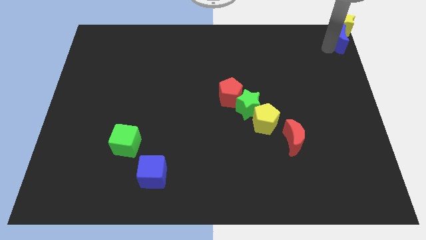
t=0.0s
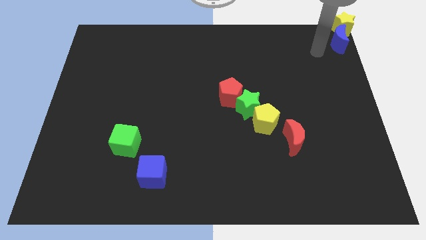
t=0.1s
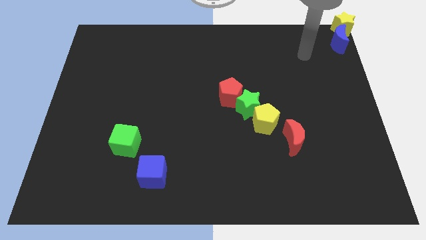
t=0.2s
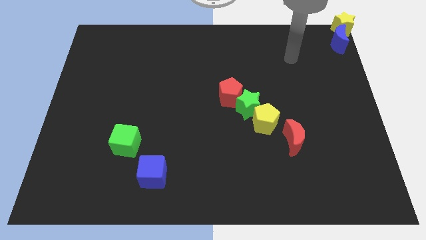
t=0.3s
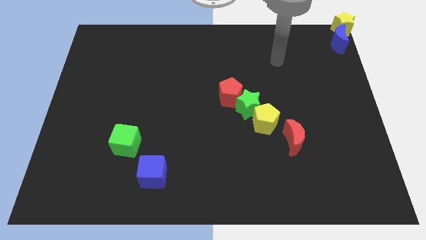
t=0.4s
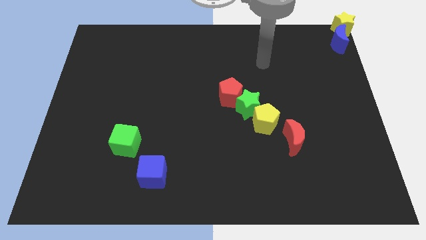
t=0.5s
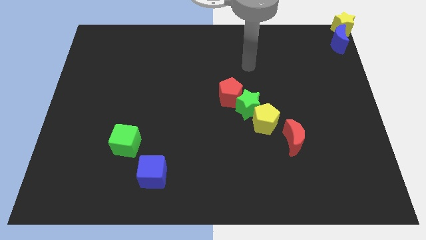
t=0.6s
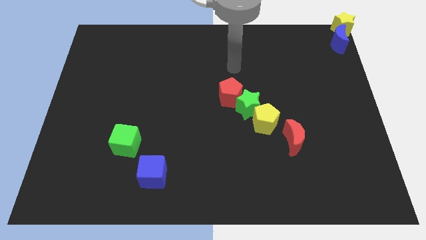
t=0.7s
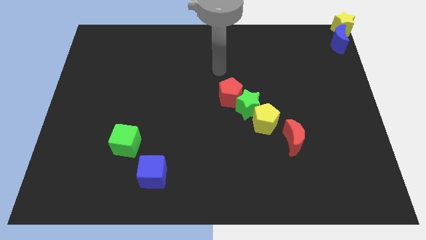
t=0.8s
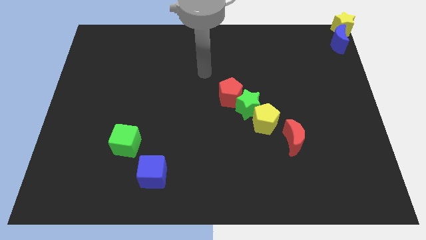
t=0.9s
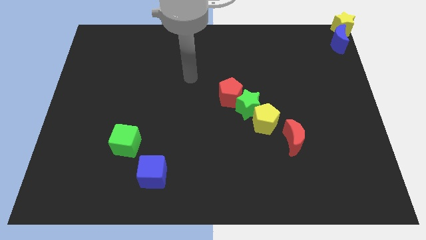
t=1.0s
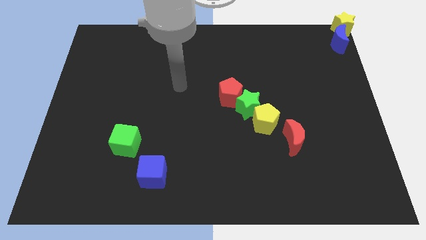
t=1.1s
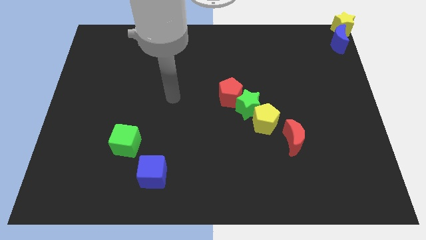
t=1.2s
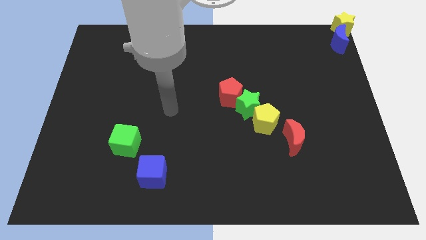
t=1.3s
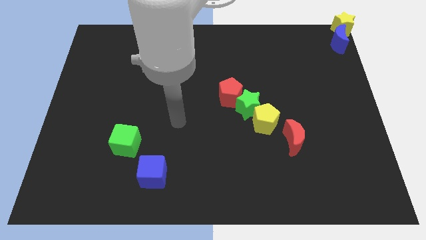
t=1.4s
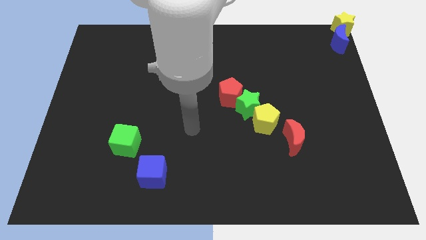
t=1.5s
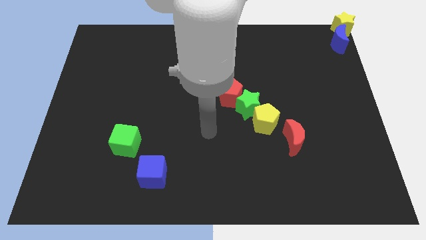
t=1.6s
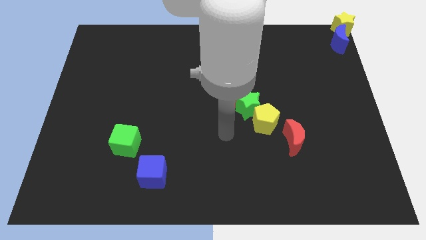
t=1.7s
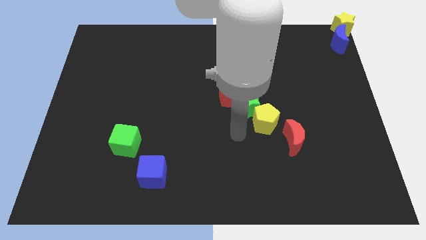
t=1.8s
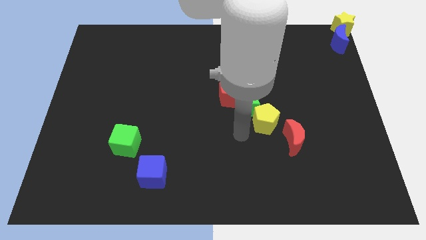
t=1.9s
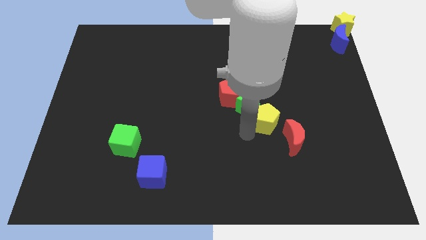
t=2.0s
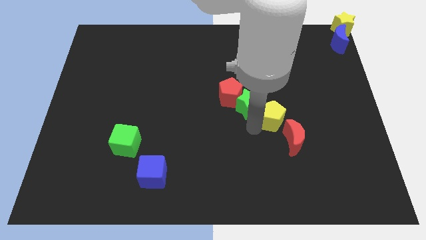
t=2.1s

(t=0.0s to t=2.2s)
point your arm at the bottom left of the yellow pentagon

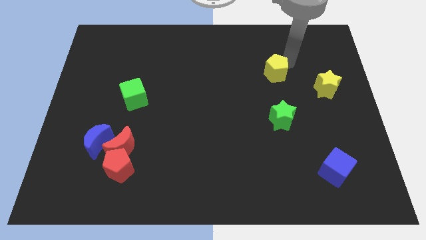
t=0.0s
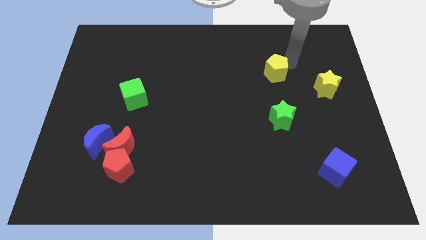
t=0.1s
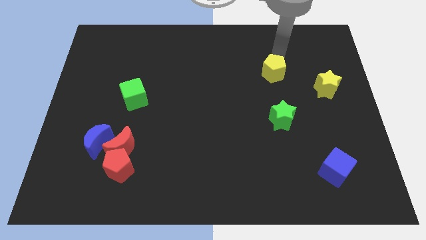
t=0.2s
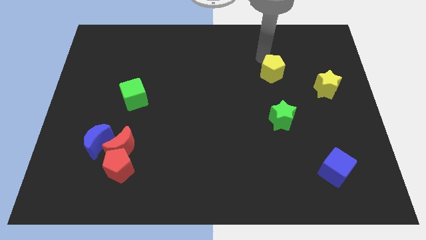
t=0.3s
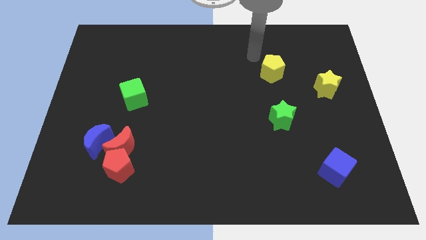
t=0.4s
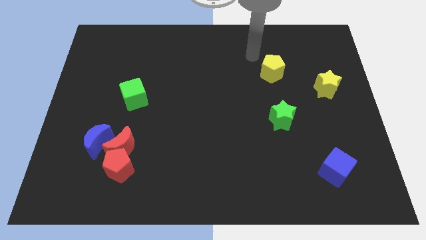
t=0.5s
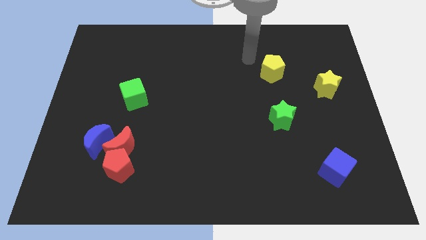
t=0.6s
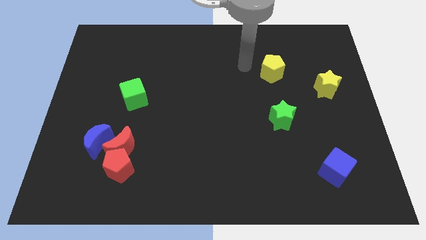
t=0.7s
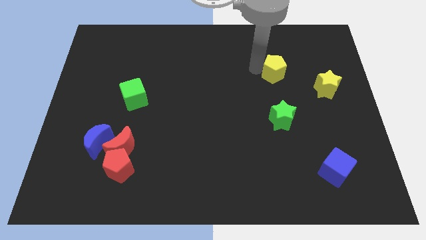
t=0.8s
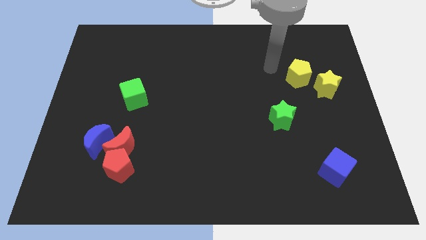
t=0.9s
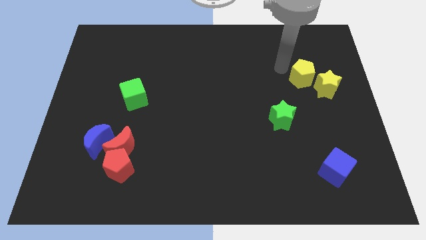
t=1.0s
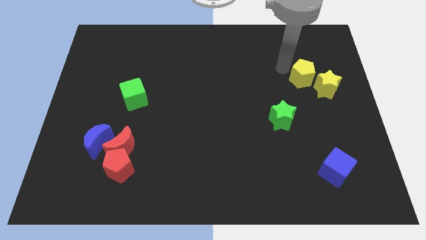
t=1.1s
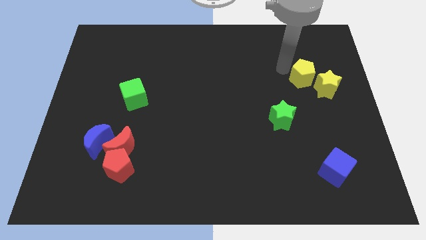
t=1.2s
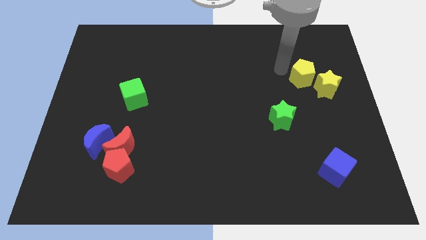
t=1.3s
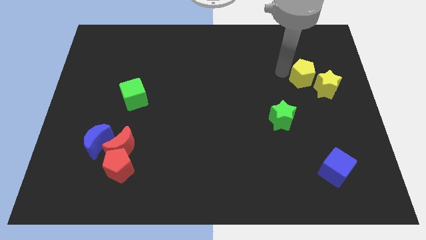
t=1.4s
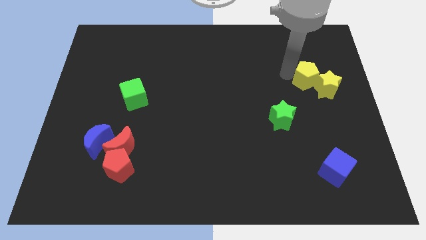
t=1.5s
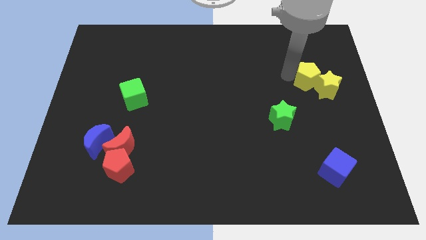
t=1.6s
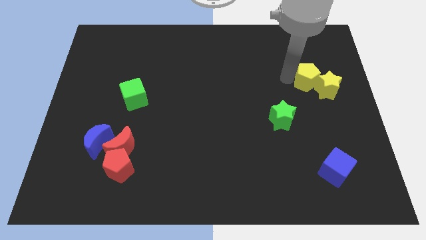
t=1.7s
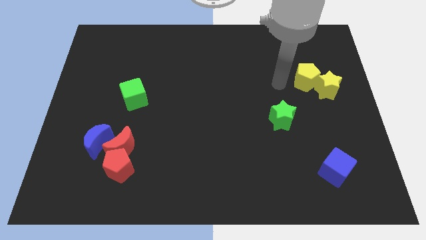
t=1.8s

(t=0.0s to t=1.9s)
move the yellow pentagon to the left side of the yellow star

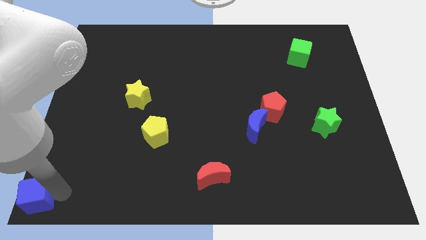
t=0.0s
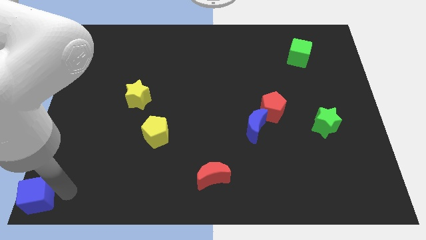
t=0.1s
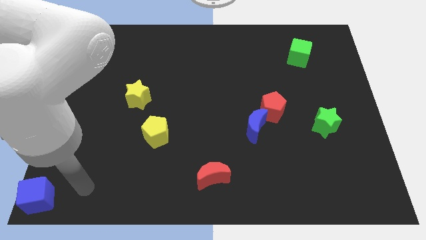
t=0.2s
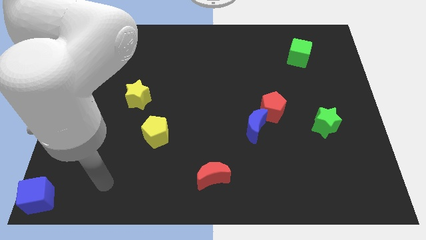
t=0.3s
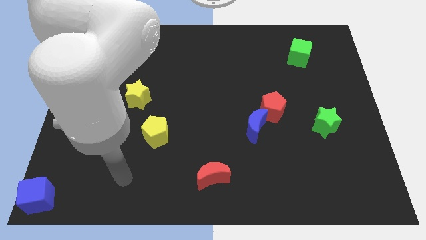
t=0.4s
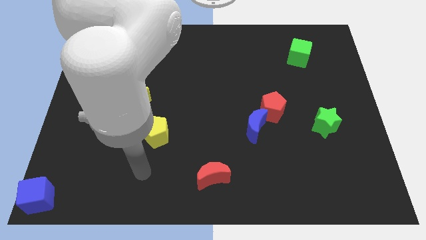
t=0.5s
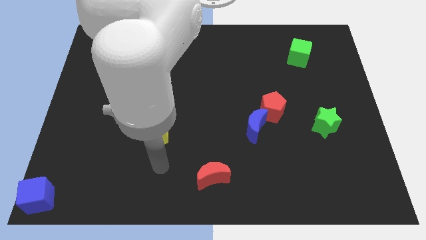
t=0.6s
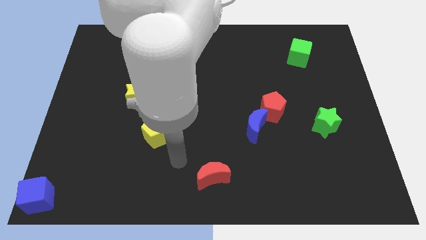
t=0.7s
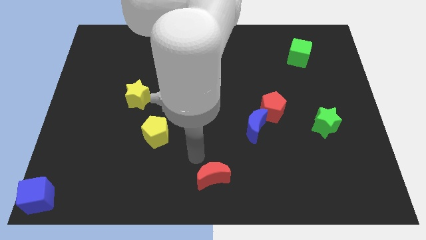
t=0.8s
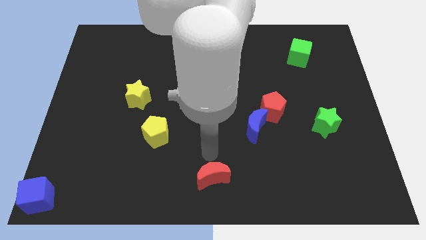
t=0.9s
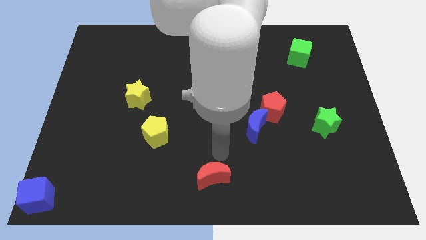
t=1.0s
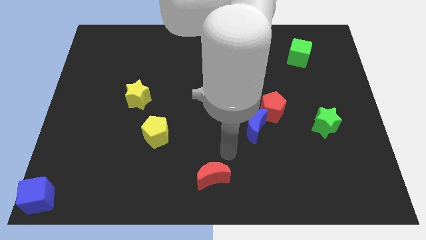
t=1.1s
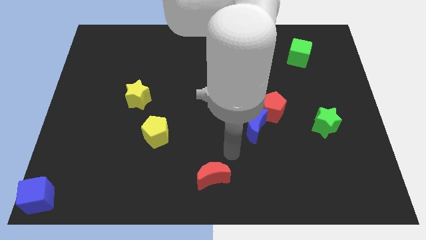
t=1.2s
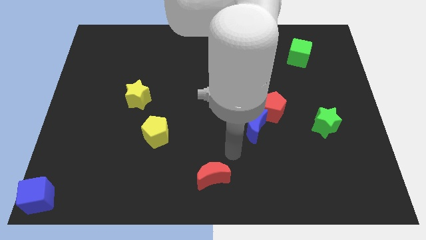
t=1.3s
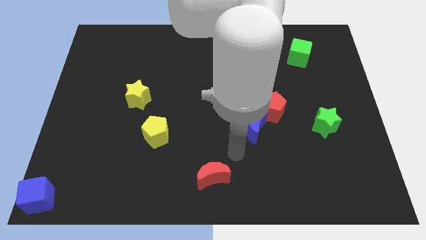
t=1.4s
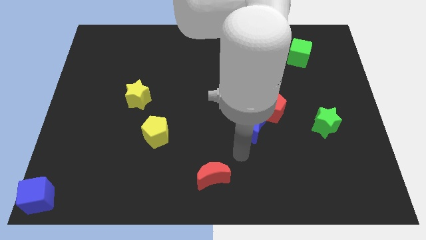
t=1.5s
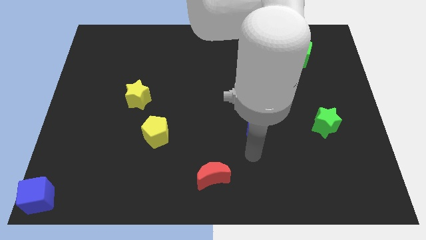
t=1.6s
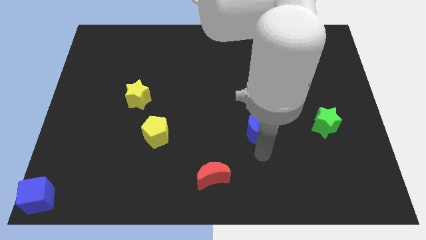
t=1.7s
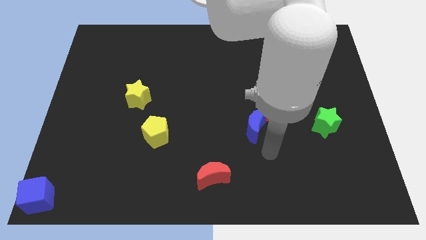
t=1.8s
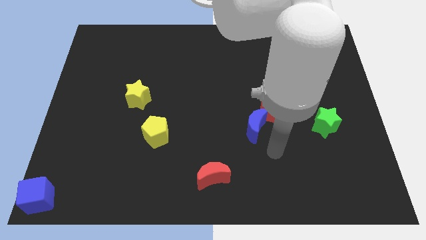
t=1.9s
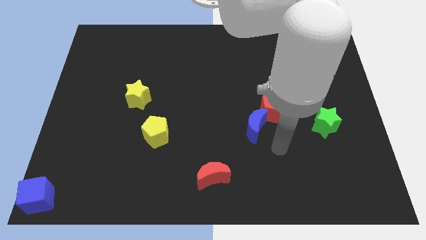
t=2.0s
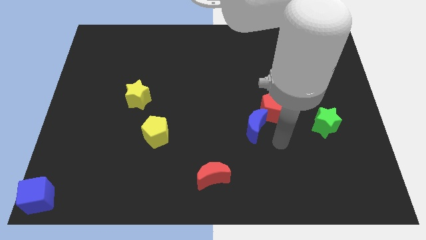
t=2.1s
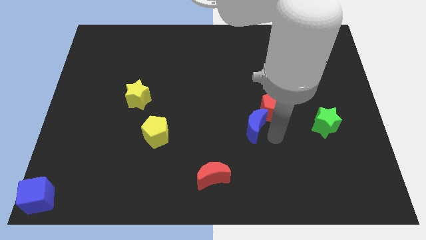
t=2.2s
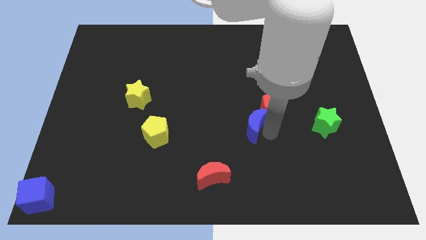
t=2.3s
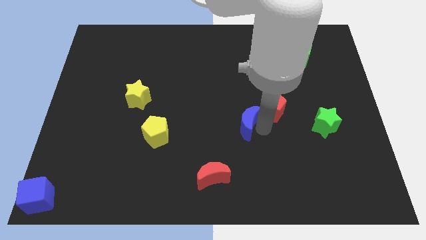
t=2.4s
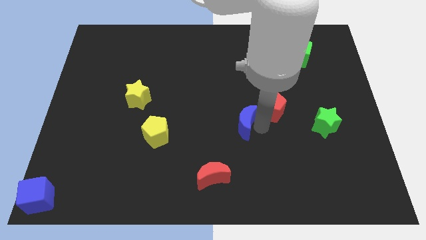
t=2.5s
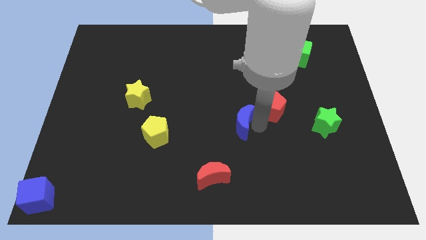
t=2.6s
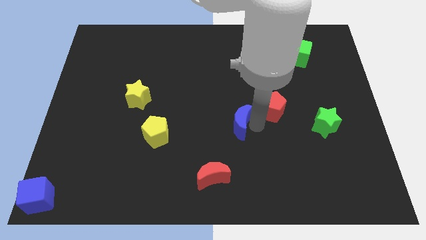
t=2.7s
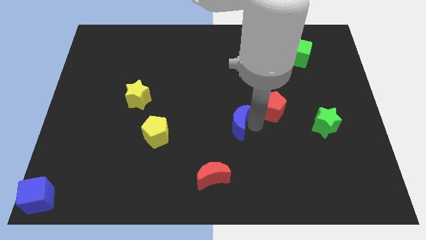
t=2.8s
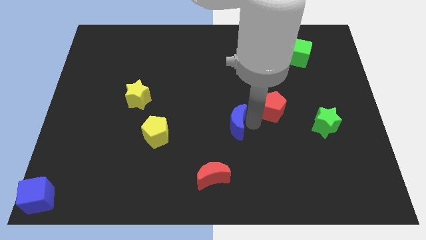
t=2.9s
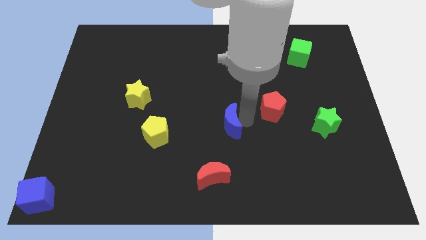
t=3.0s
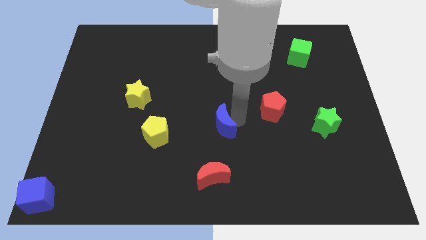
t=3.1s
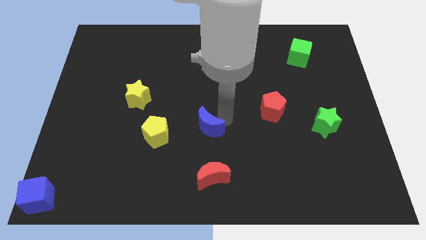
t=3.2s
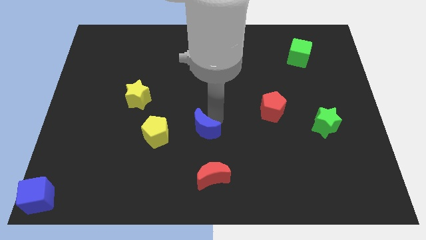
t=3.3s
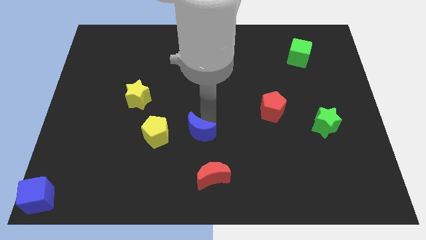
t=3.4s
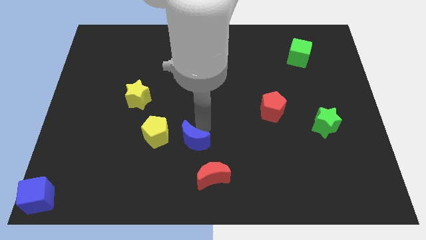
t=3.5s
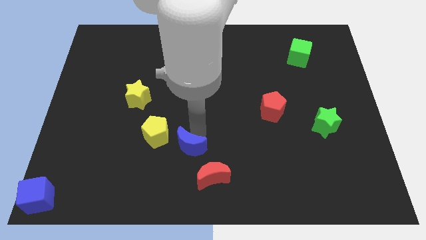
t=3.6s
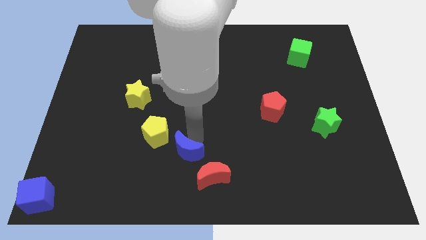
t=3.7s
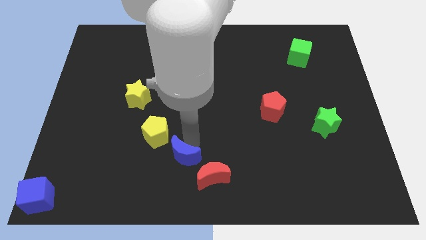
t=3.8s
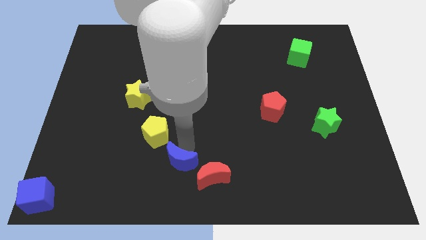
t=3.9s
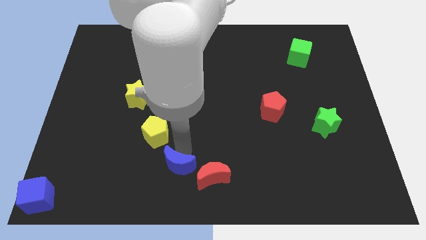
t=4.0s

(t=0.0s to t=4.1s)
place blue crescent below the yellow pentagon

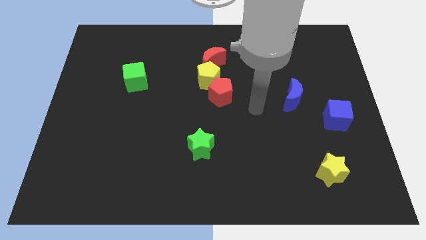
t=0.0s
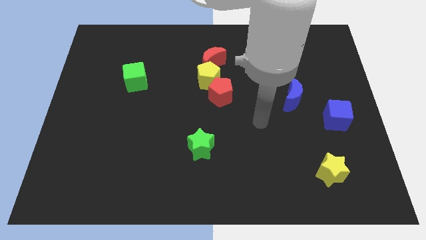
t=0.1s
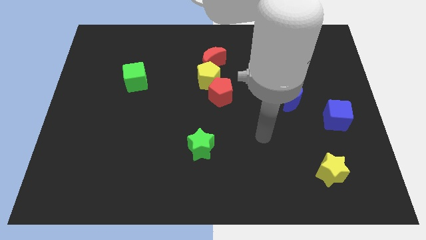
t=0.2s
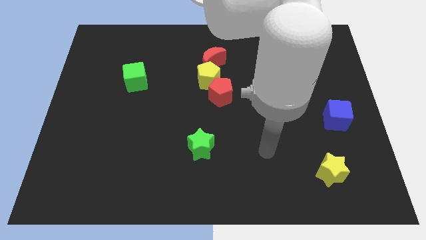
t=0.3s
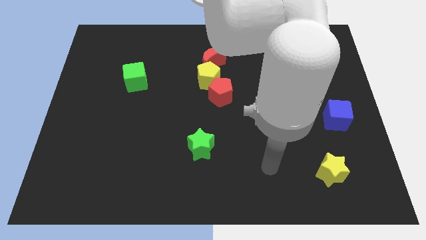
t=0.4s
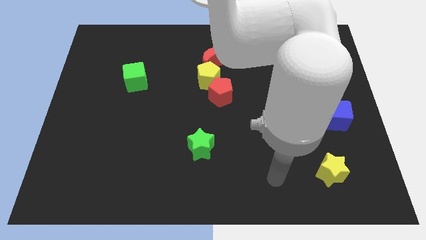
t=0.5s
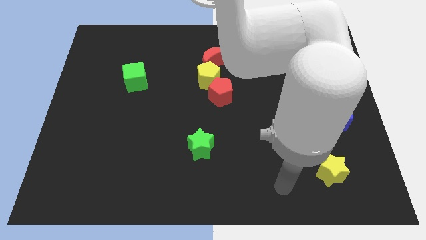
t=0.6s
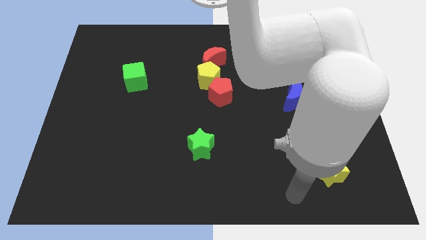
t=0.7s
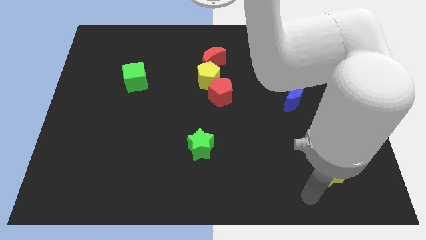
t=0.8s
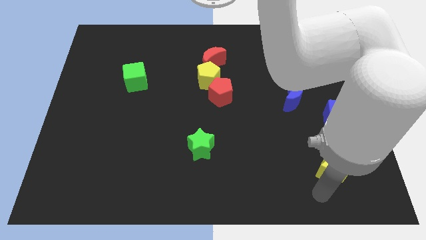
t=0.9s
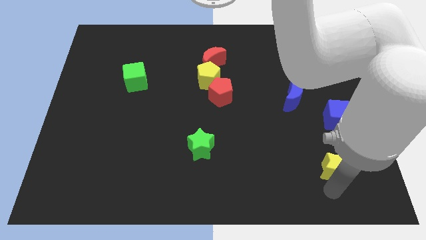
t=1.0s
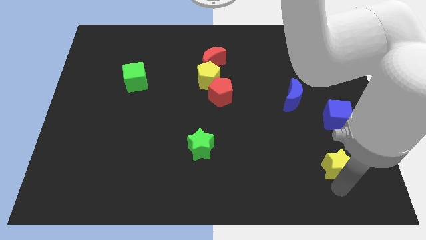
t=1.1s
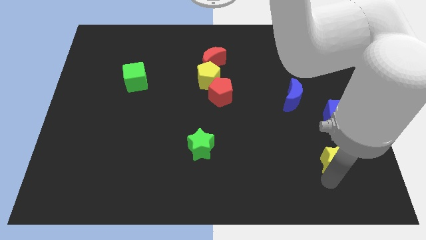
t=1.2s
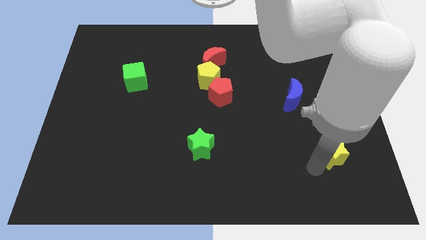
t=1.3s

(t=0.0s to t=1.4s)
touch the yellow star
